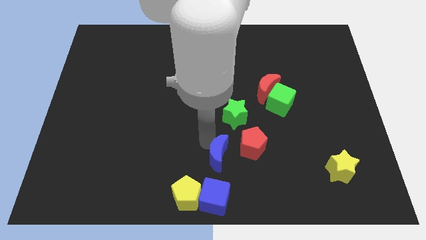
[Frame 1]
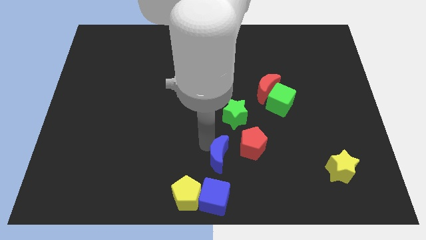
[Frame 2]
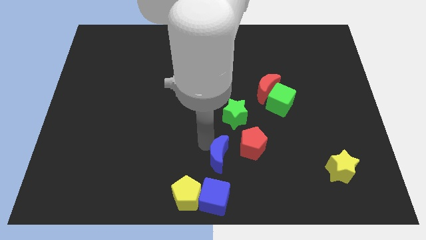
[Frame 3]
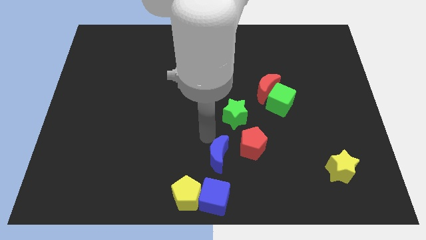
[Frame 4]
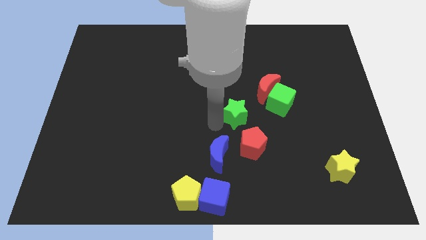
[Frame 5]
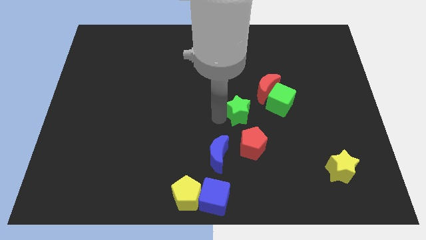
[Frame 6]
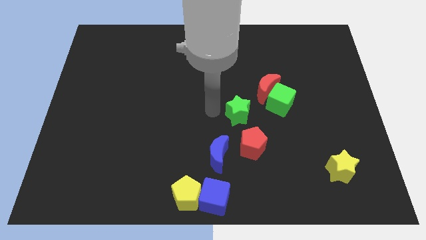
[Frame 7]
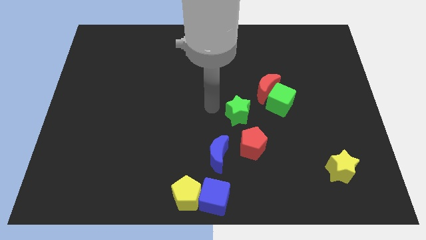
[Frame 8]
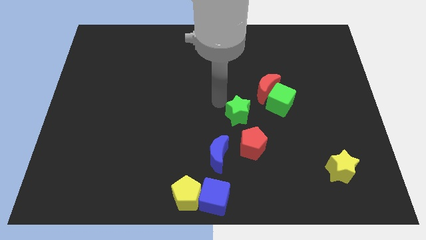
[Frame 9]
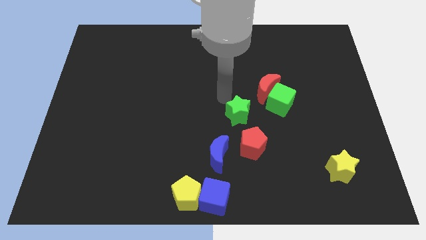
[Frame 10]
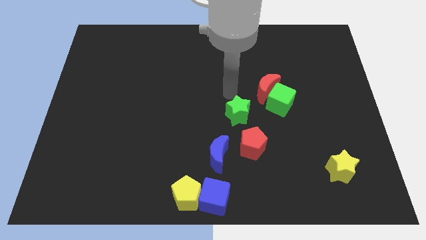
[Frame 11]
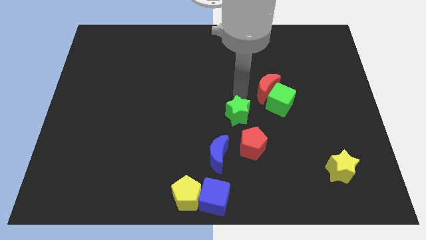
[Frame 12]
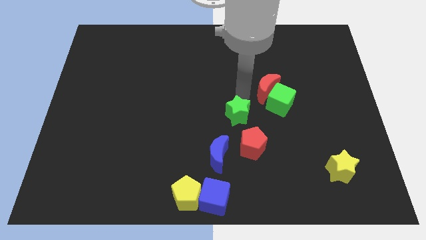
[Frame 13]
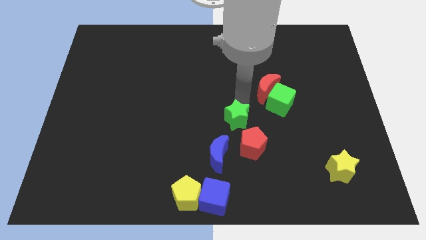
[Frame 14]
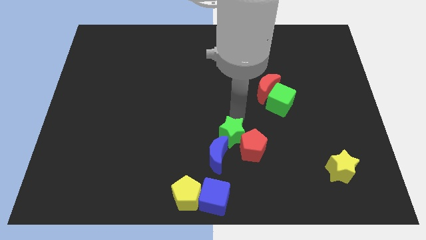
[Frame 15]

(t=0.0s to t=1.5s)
move the green star close to the blue moon and red pentagon

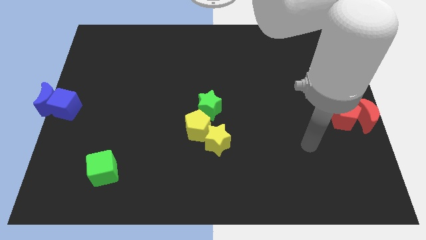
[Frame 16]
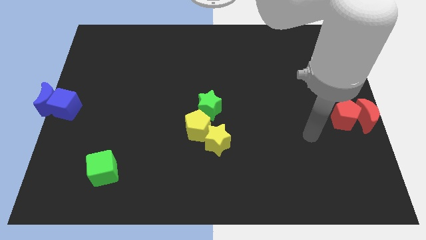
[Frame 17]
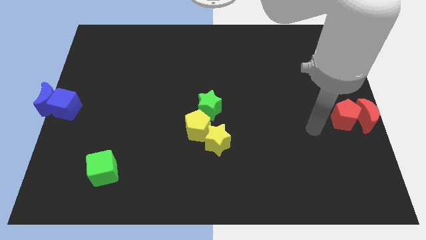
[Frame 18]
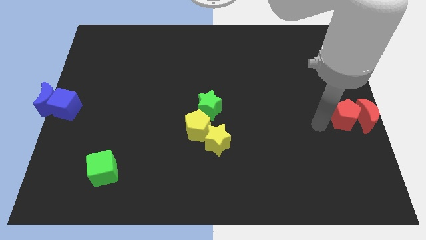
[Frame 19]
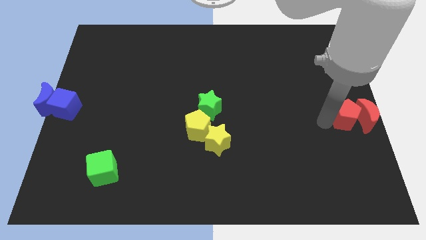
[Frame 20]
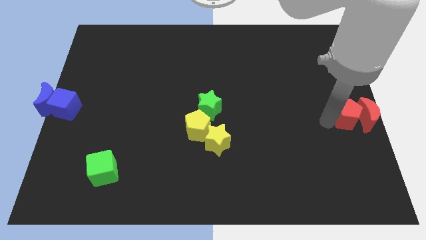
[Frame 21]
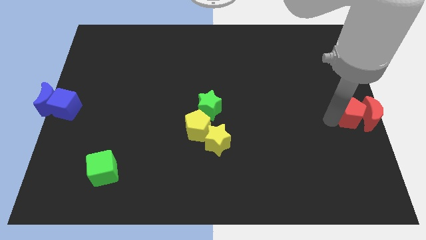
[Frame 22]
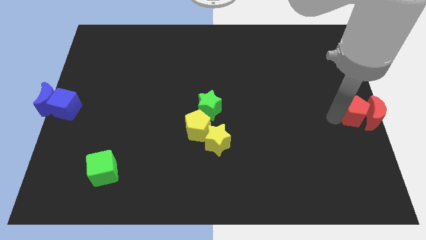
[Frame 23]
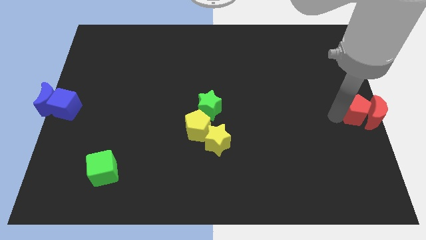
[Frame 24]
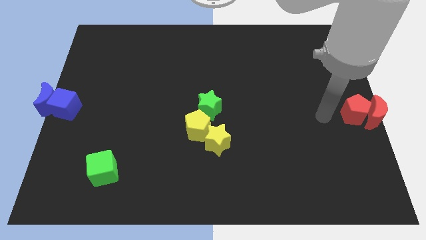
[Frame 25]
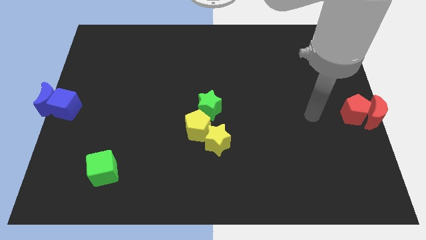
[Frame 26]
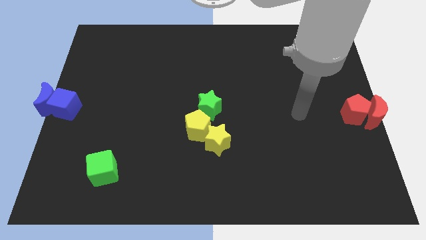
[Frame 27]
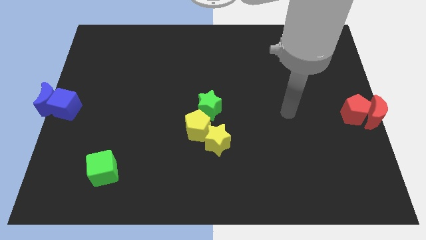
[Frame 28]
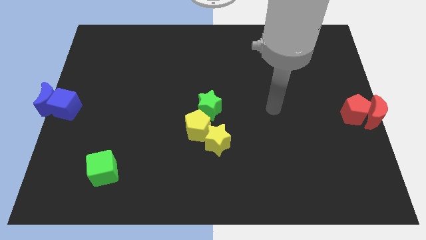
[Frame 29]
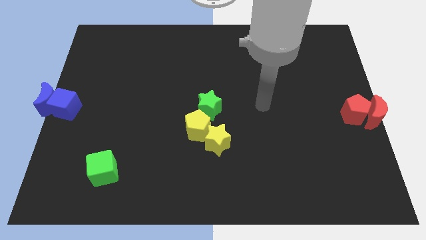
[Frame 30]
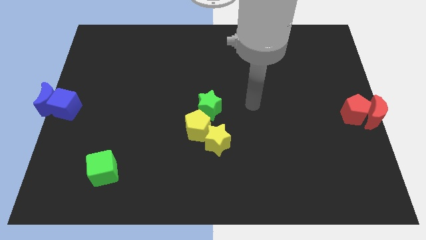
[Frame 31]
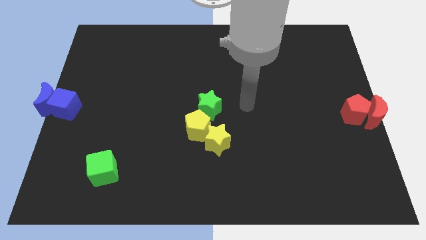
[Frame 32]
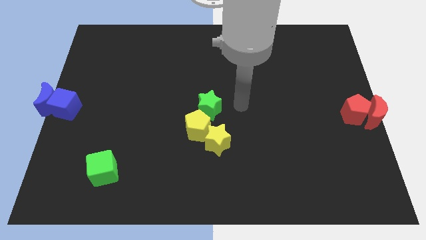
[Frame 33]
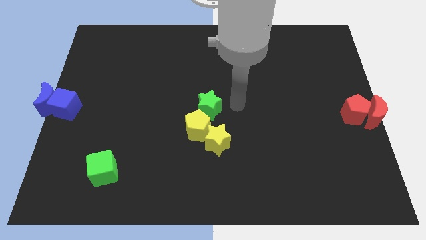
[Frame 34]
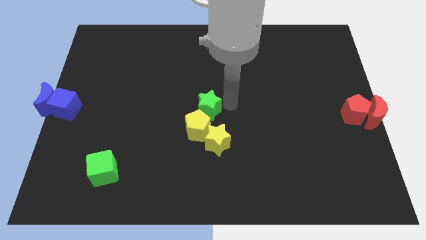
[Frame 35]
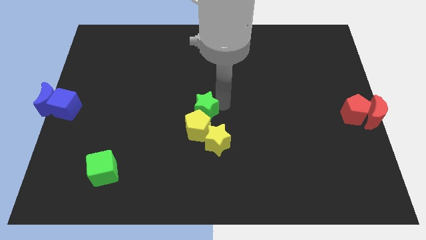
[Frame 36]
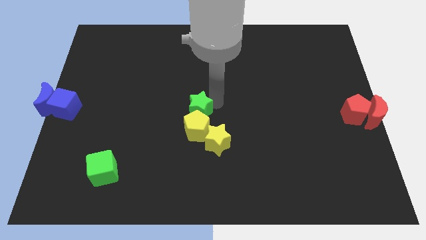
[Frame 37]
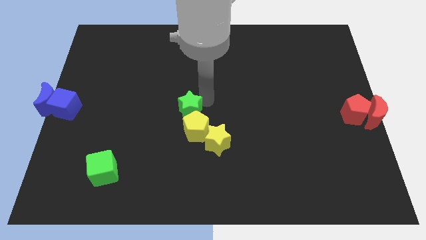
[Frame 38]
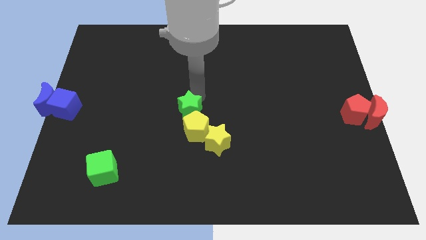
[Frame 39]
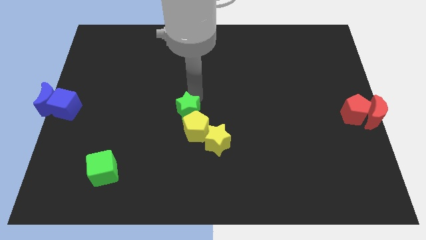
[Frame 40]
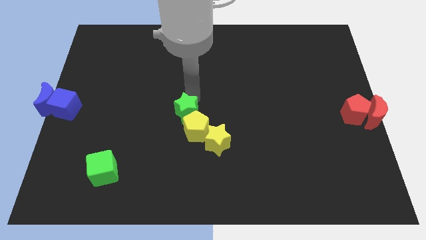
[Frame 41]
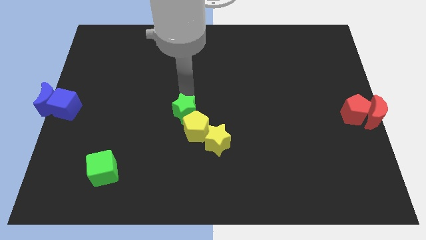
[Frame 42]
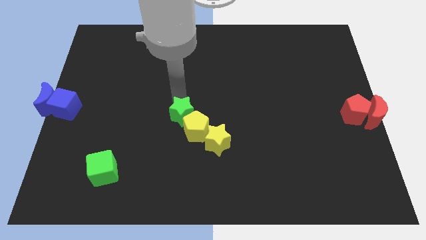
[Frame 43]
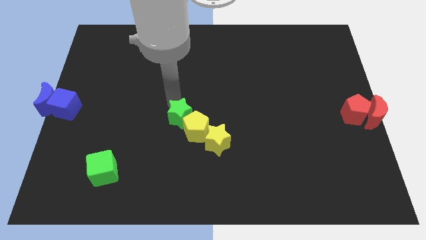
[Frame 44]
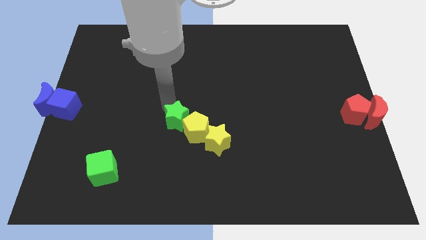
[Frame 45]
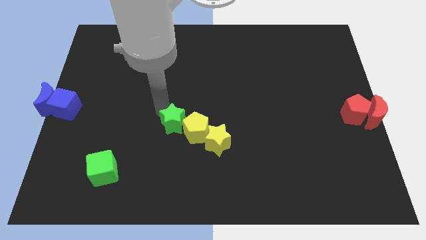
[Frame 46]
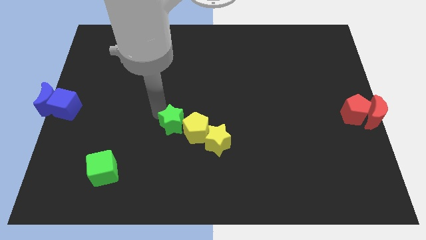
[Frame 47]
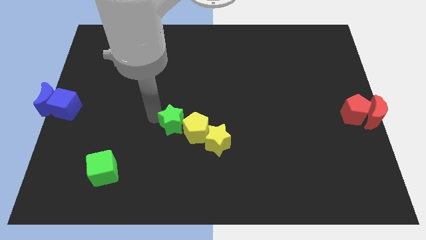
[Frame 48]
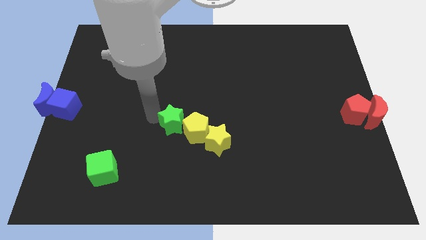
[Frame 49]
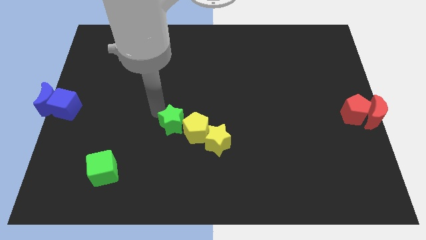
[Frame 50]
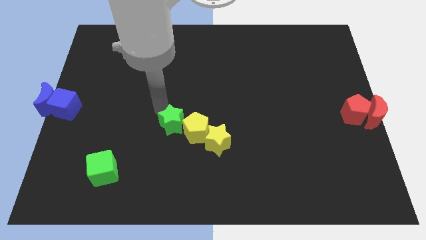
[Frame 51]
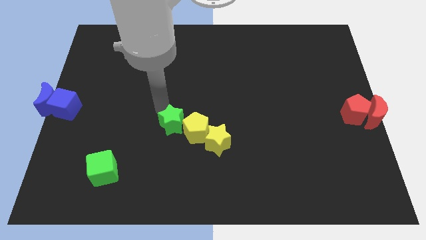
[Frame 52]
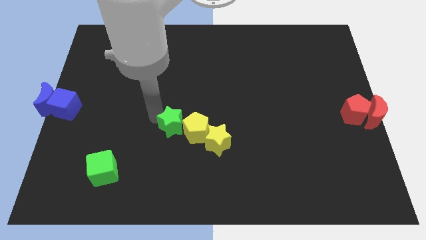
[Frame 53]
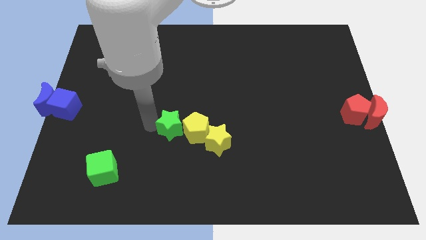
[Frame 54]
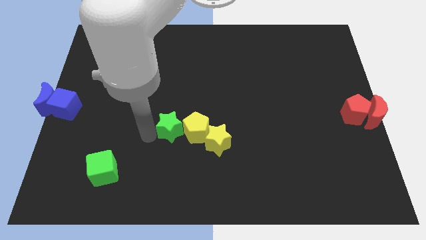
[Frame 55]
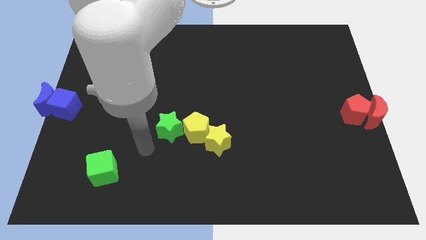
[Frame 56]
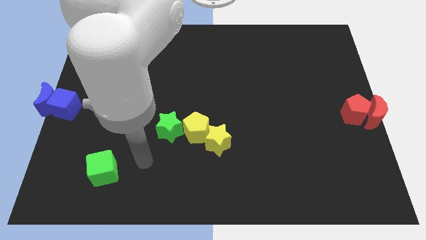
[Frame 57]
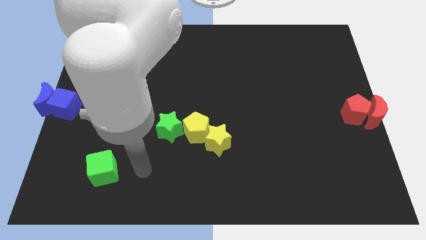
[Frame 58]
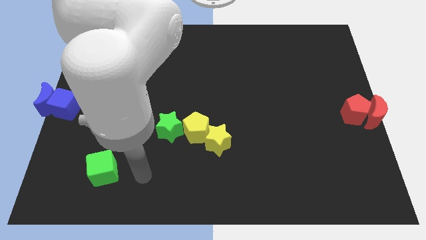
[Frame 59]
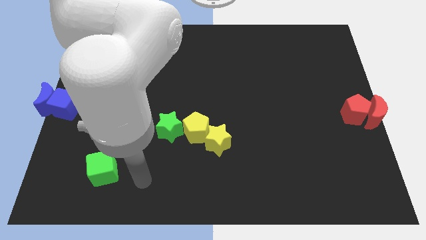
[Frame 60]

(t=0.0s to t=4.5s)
move the green star to the left side of the yellow pentagon

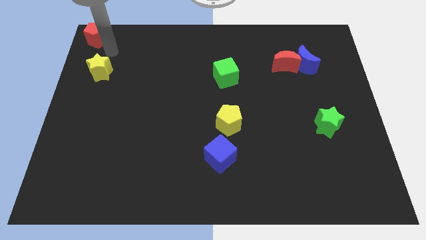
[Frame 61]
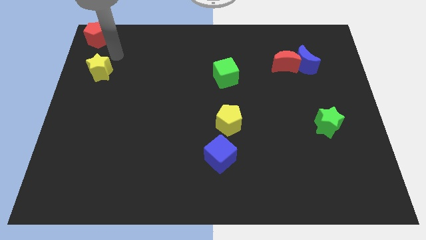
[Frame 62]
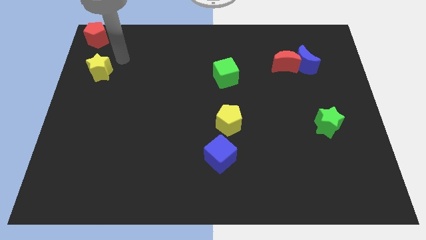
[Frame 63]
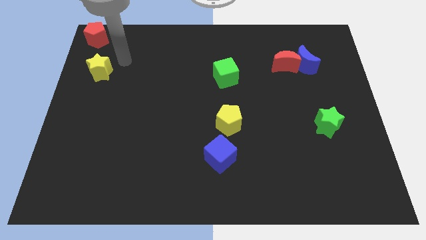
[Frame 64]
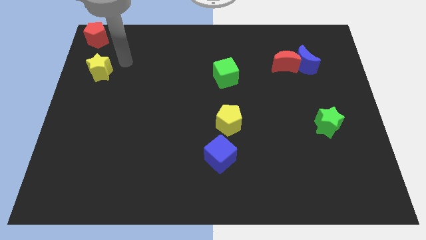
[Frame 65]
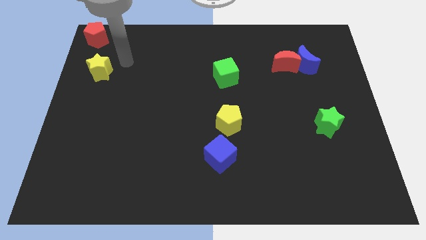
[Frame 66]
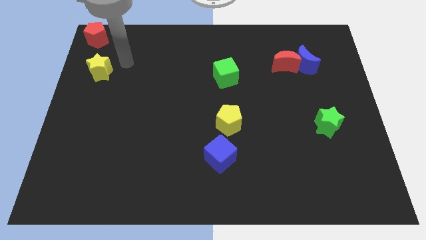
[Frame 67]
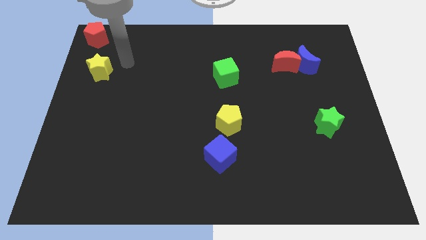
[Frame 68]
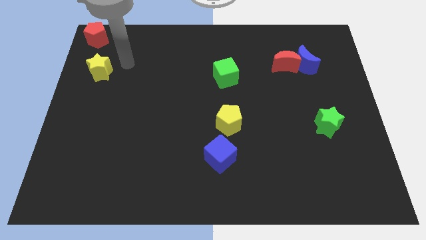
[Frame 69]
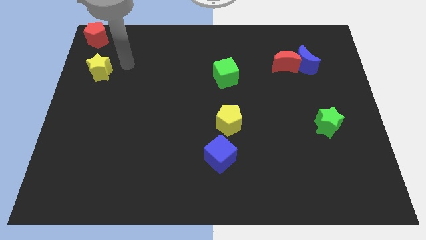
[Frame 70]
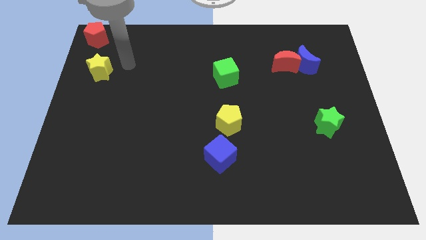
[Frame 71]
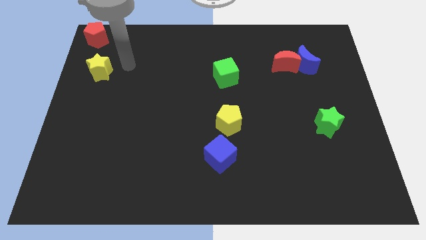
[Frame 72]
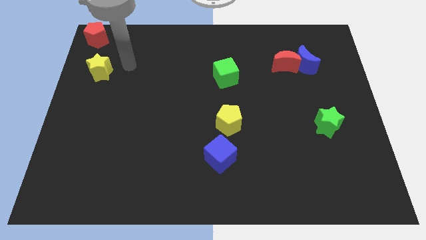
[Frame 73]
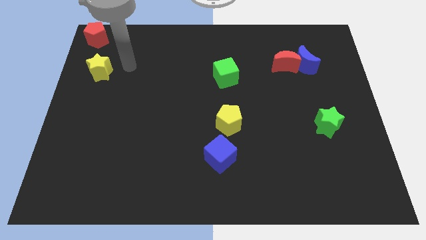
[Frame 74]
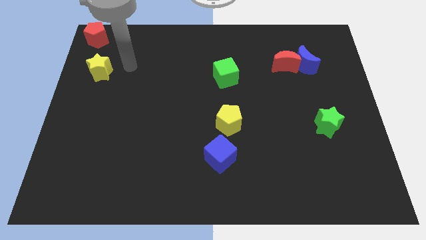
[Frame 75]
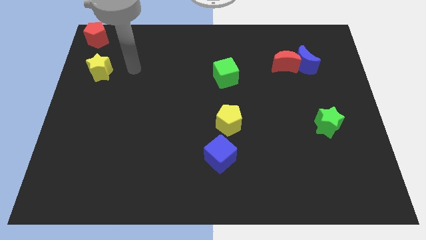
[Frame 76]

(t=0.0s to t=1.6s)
move arm away from red pentagon

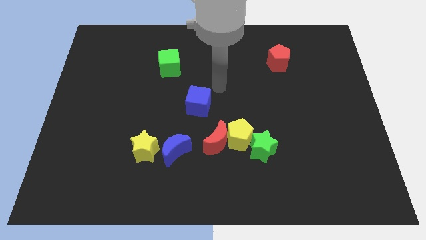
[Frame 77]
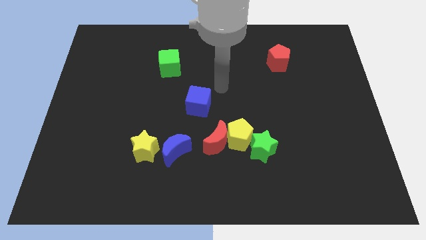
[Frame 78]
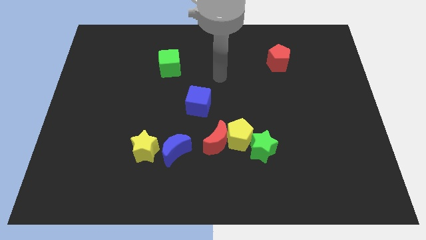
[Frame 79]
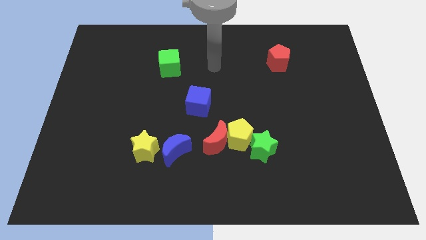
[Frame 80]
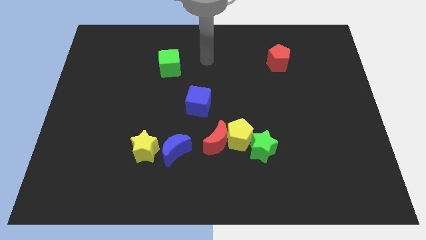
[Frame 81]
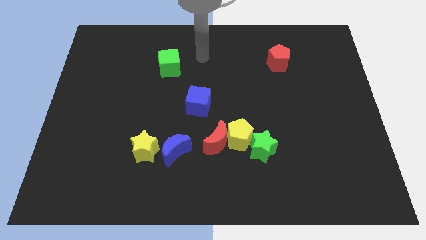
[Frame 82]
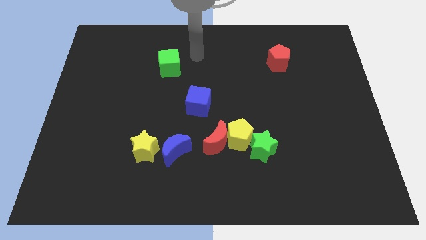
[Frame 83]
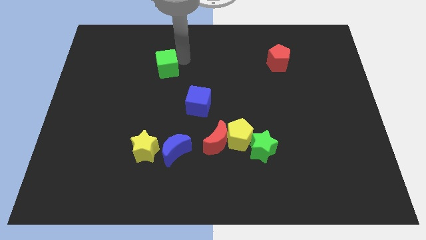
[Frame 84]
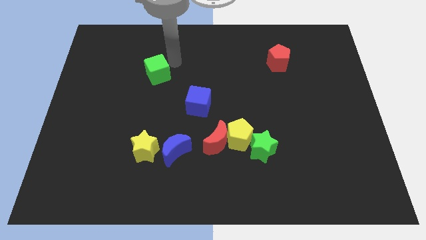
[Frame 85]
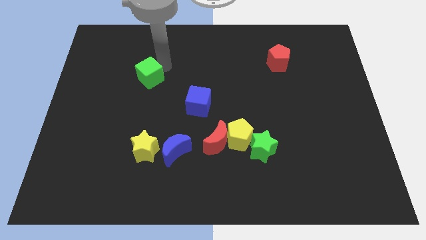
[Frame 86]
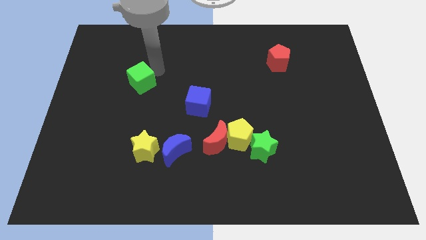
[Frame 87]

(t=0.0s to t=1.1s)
push green cube above yellow star

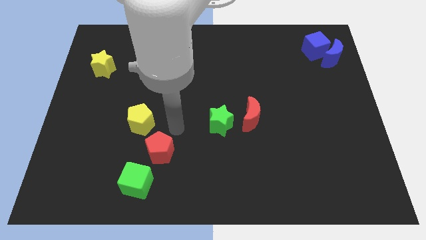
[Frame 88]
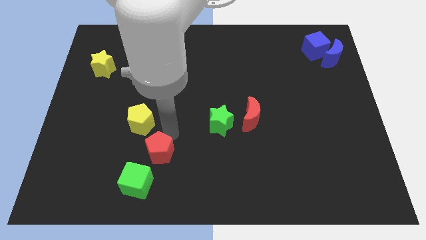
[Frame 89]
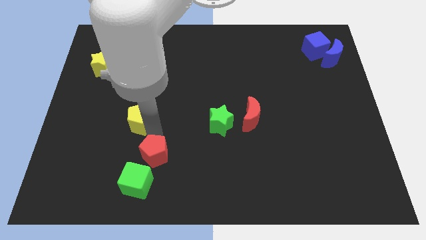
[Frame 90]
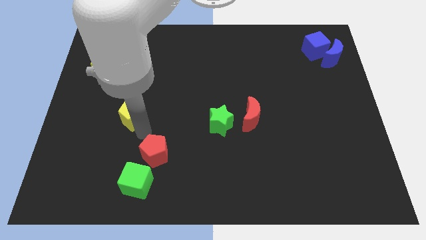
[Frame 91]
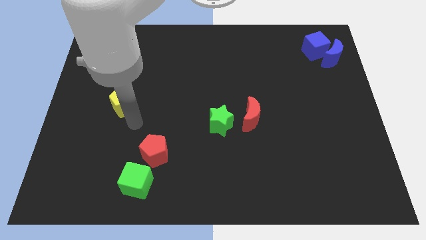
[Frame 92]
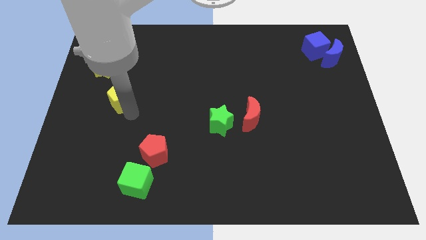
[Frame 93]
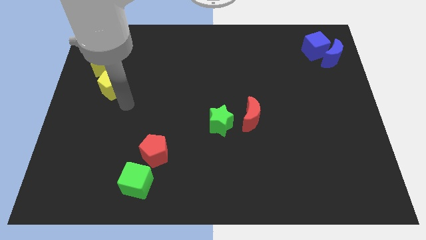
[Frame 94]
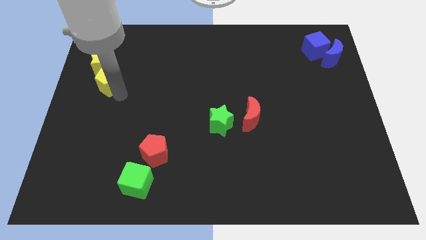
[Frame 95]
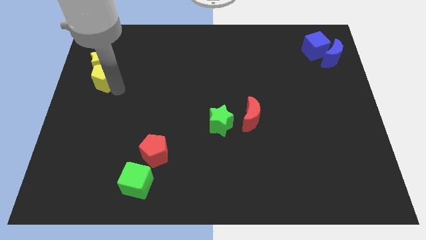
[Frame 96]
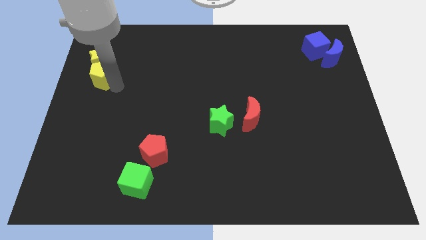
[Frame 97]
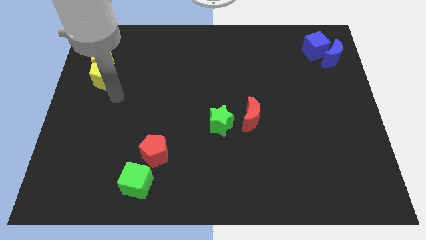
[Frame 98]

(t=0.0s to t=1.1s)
slide the yellow pentagon close to the yellow star
